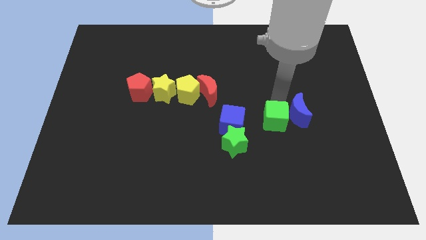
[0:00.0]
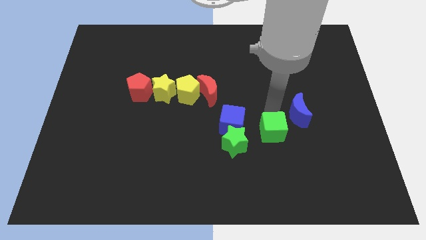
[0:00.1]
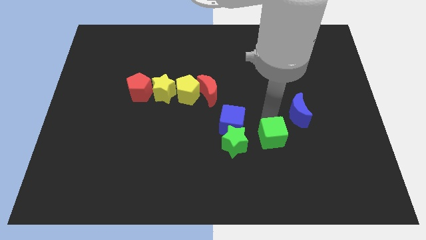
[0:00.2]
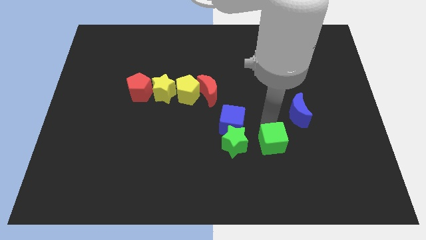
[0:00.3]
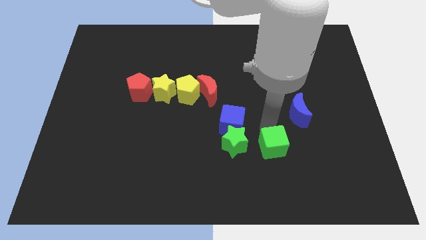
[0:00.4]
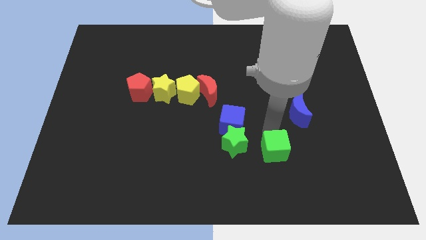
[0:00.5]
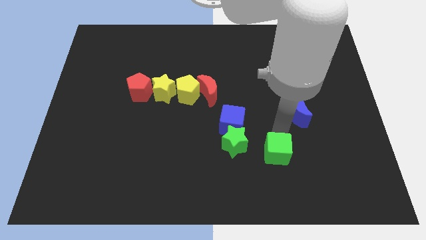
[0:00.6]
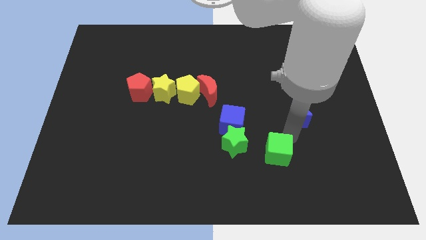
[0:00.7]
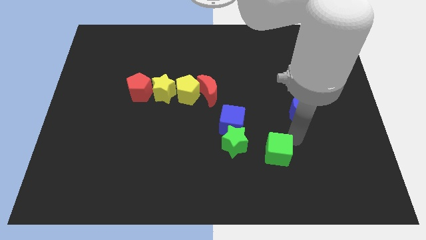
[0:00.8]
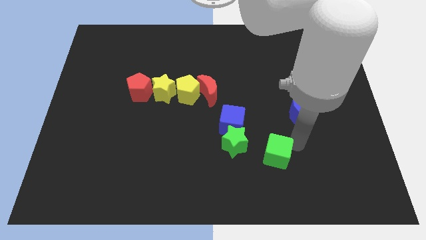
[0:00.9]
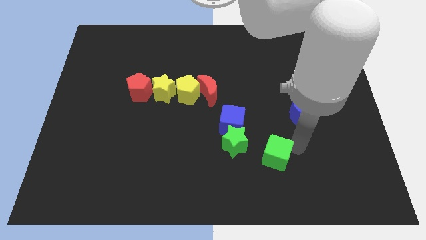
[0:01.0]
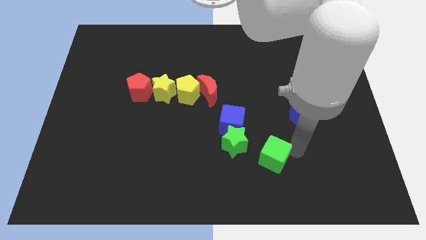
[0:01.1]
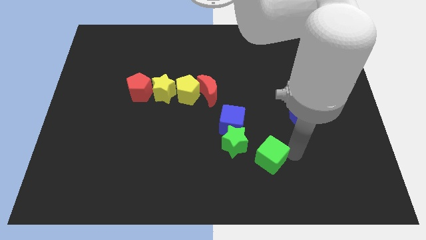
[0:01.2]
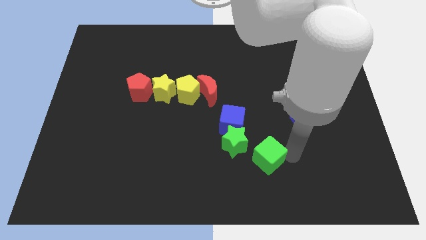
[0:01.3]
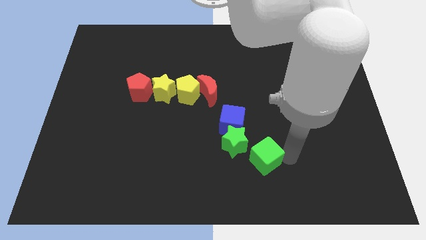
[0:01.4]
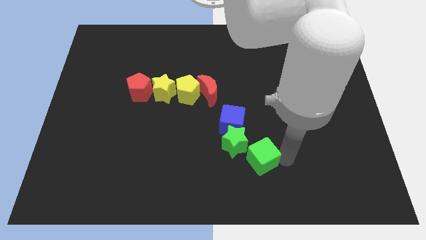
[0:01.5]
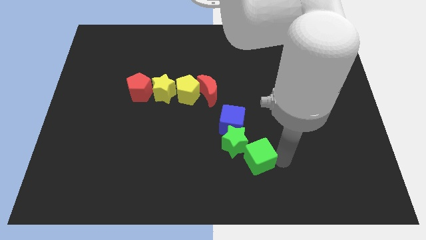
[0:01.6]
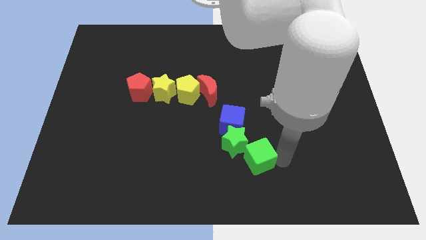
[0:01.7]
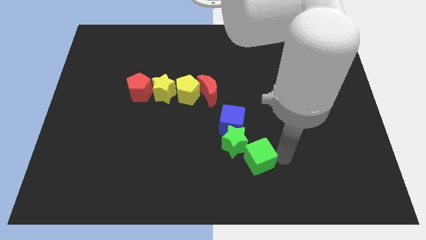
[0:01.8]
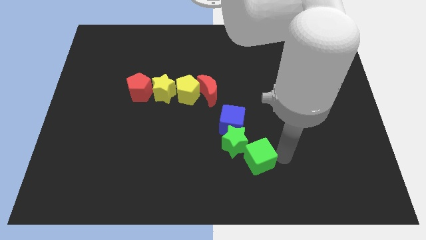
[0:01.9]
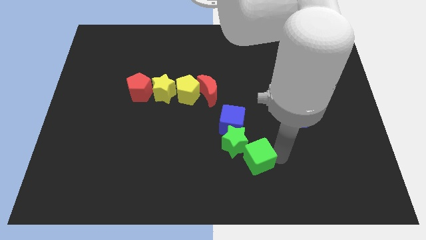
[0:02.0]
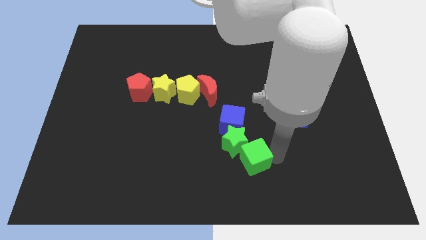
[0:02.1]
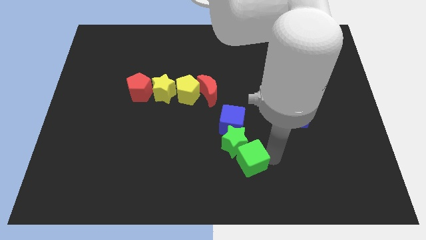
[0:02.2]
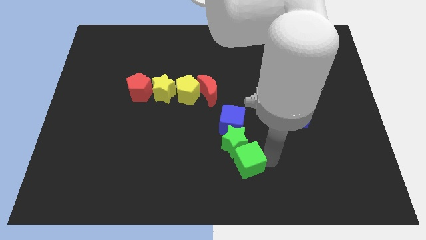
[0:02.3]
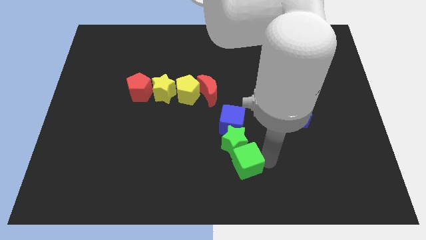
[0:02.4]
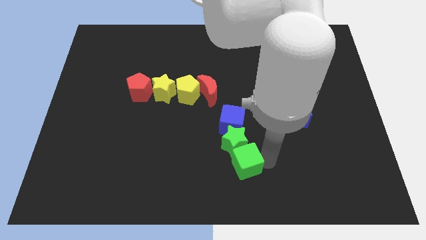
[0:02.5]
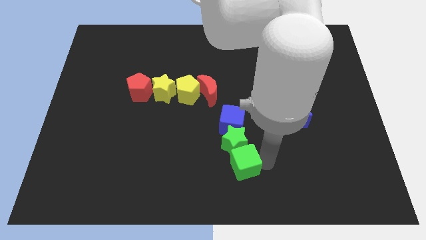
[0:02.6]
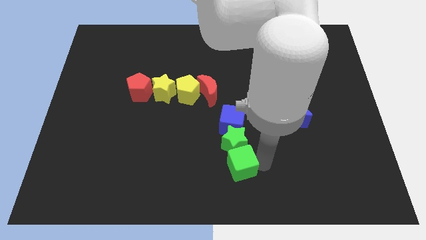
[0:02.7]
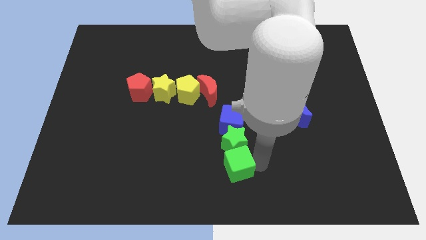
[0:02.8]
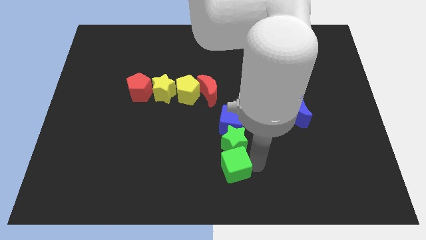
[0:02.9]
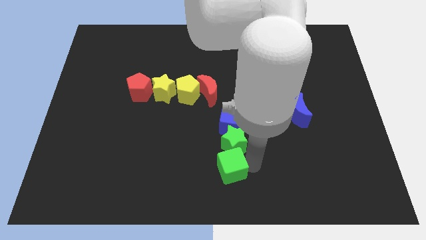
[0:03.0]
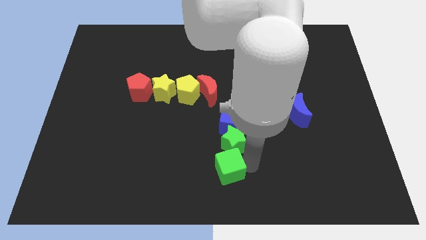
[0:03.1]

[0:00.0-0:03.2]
move green cube below green star

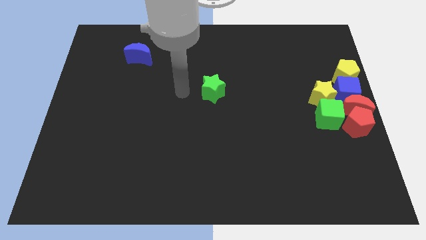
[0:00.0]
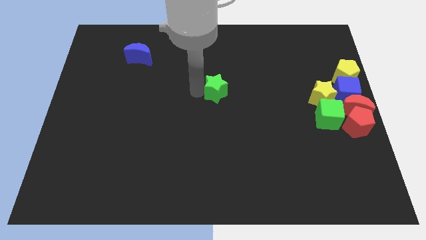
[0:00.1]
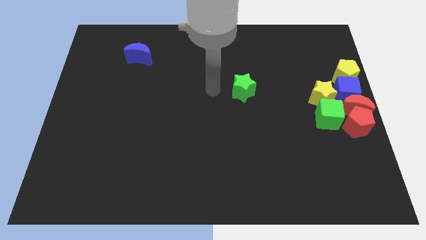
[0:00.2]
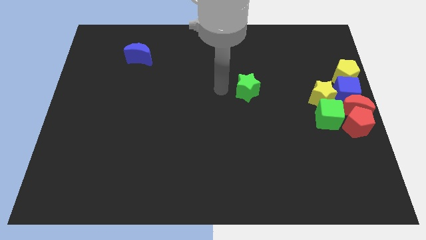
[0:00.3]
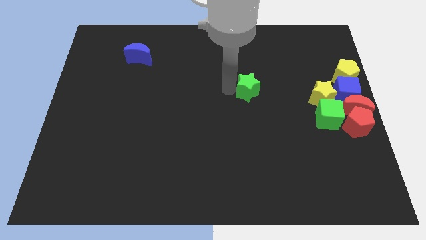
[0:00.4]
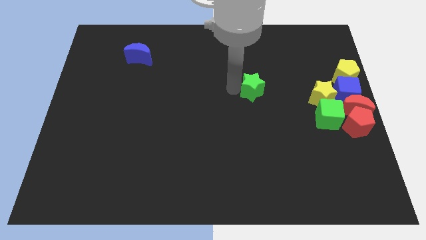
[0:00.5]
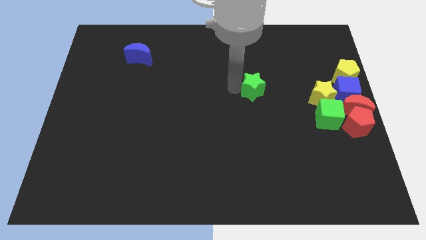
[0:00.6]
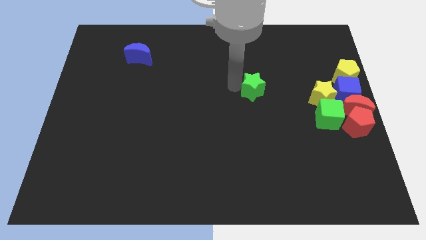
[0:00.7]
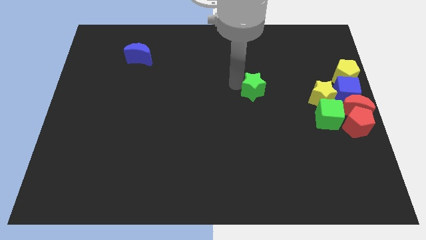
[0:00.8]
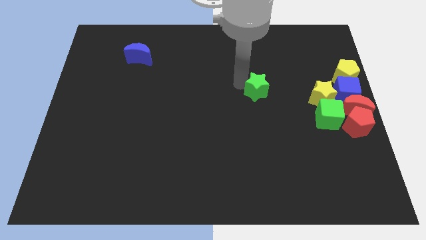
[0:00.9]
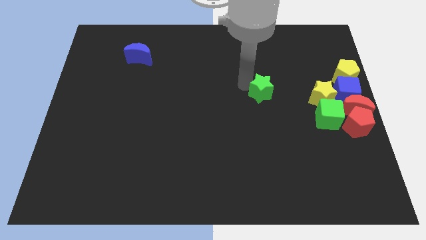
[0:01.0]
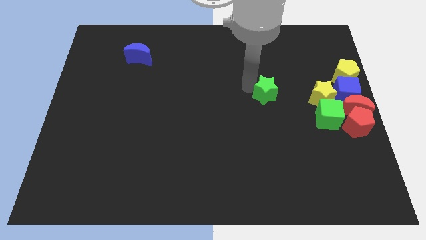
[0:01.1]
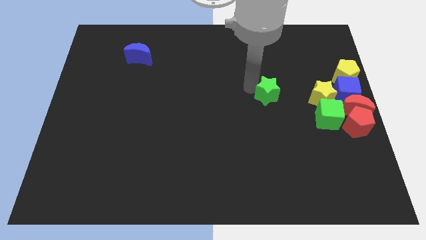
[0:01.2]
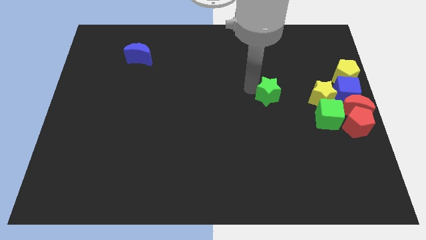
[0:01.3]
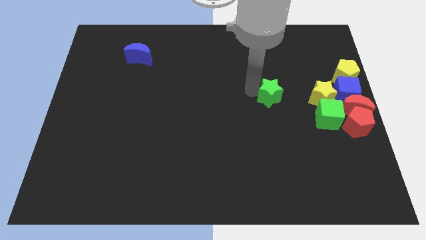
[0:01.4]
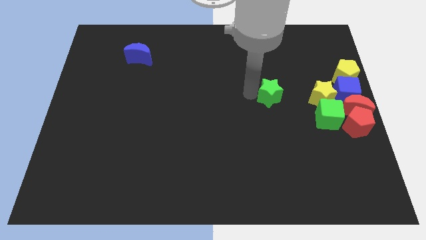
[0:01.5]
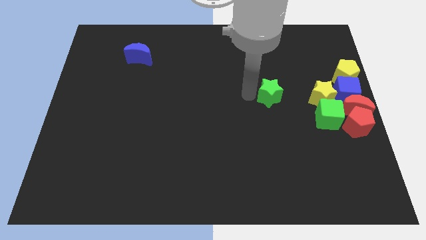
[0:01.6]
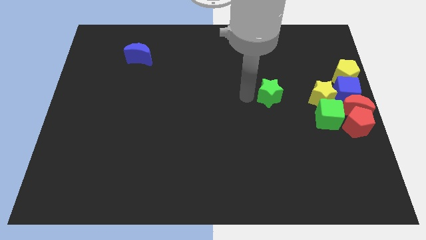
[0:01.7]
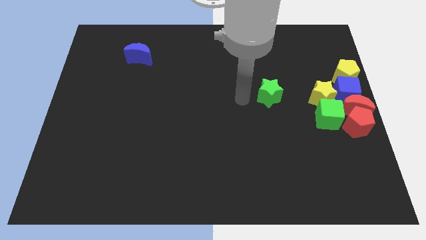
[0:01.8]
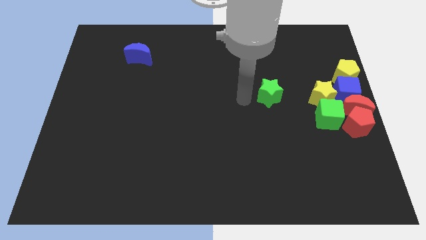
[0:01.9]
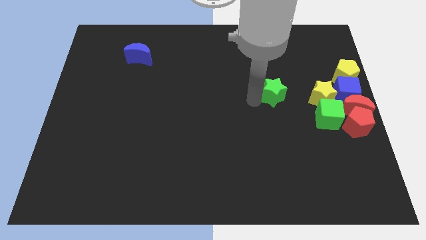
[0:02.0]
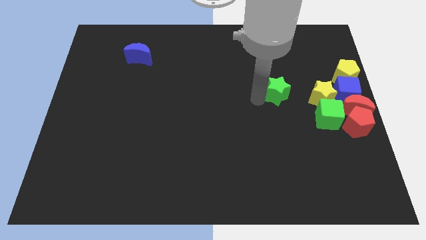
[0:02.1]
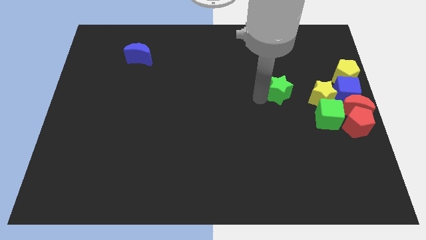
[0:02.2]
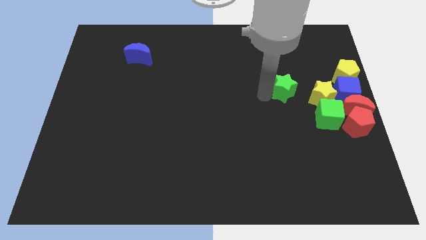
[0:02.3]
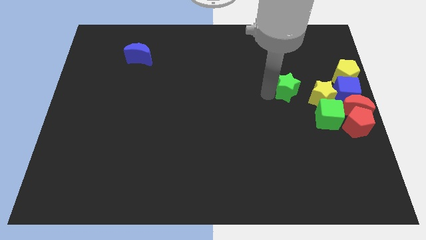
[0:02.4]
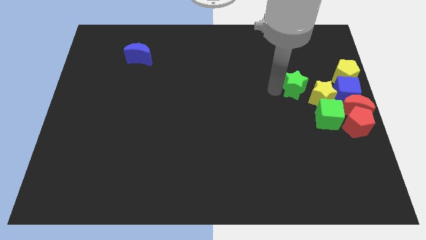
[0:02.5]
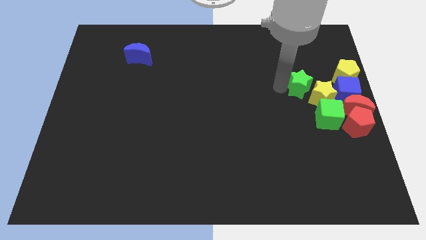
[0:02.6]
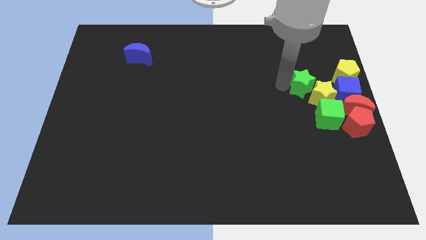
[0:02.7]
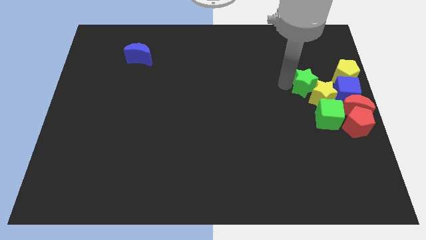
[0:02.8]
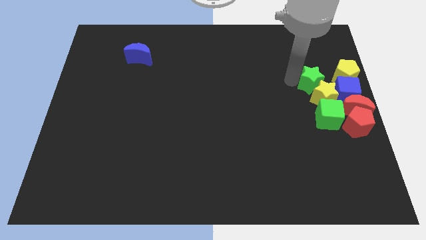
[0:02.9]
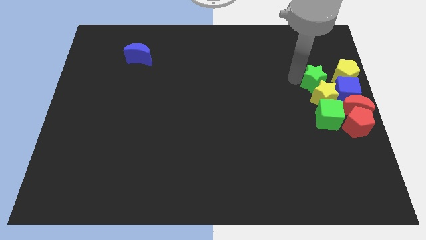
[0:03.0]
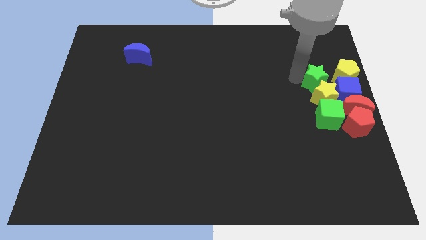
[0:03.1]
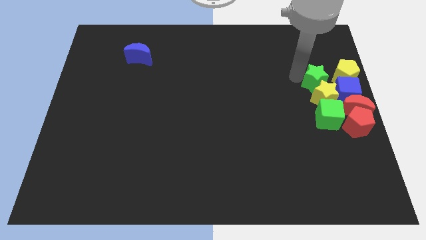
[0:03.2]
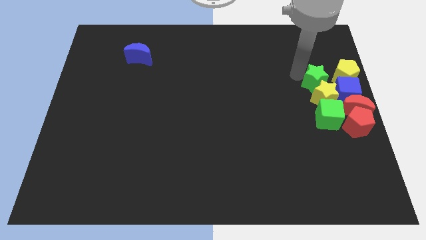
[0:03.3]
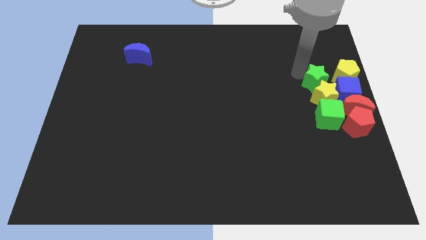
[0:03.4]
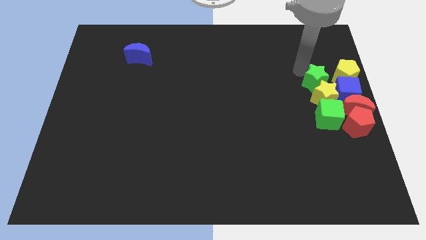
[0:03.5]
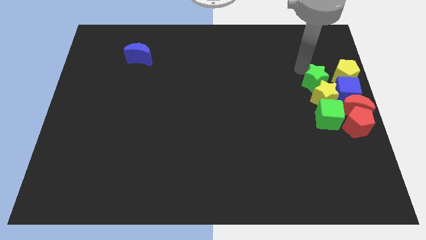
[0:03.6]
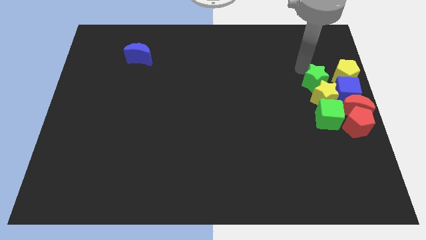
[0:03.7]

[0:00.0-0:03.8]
place the green star on top of the yellow star

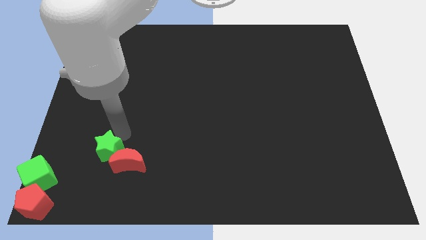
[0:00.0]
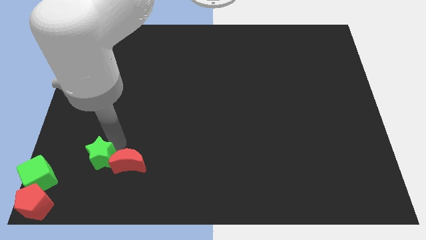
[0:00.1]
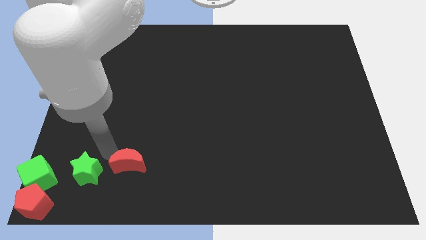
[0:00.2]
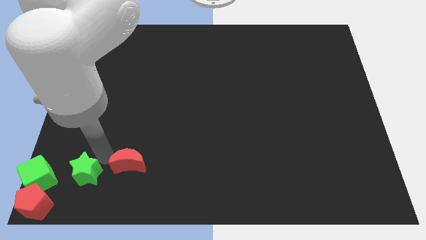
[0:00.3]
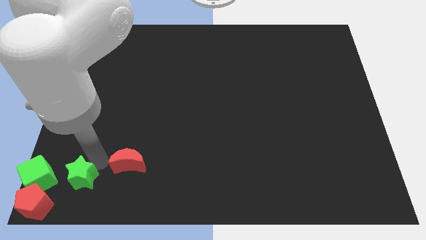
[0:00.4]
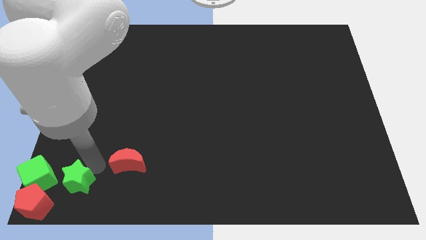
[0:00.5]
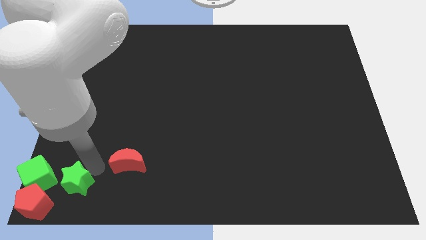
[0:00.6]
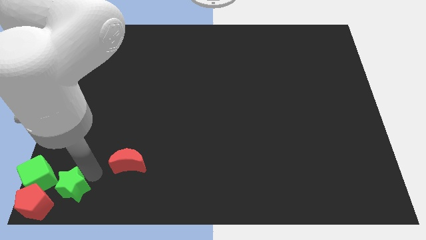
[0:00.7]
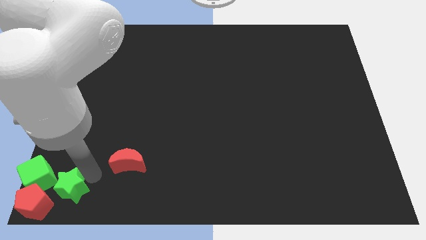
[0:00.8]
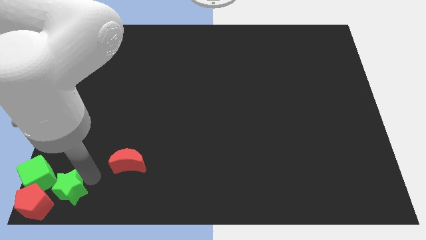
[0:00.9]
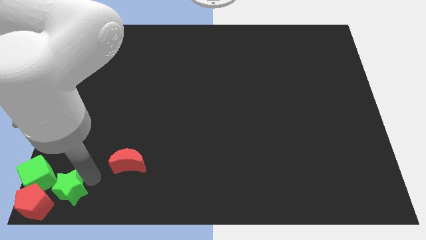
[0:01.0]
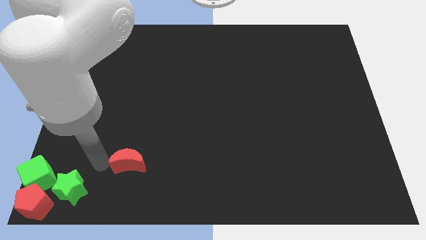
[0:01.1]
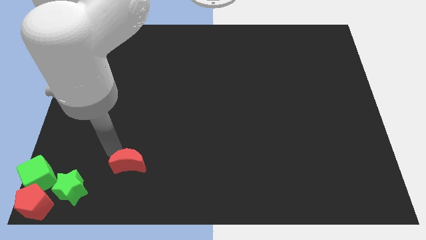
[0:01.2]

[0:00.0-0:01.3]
move the green star right side to the green cube

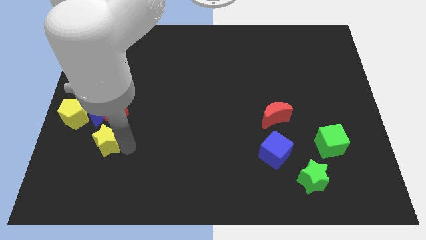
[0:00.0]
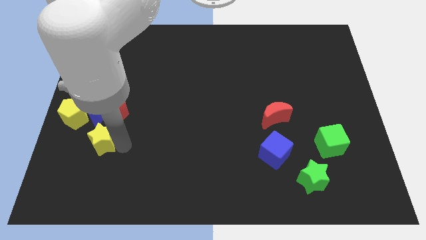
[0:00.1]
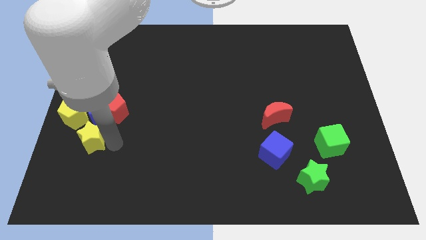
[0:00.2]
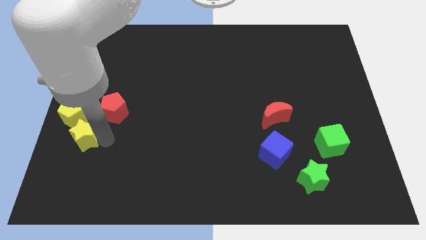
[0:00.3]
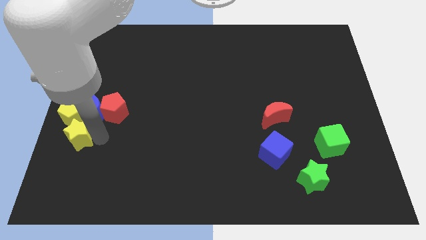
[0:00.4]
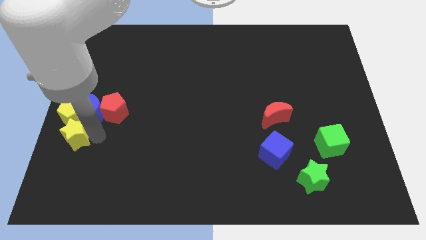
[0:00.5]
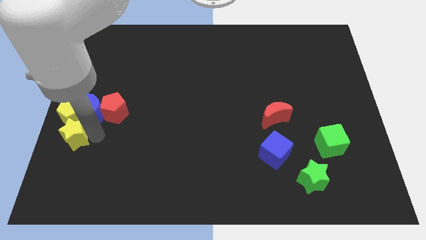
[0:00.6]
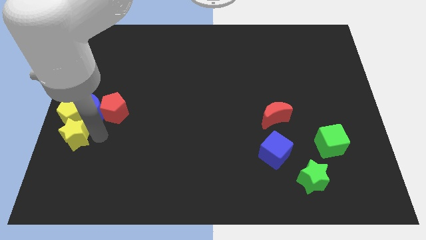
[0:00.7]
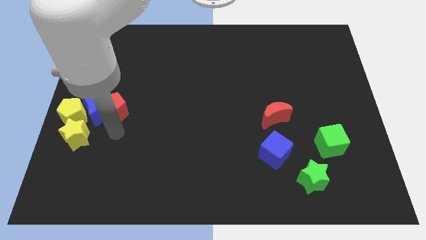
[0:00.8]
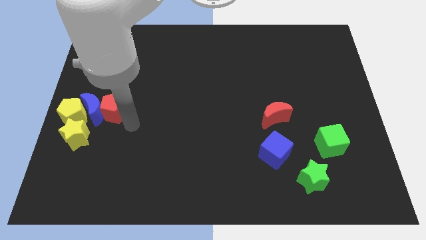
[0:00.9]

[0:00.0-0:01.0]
place the yellow star under the yellow pentagon
